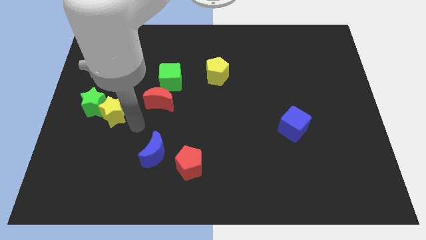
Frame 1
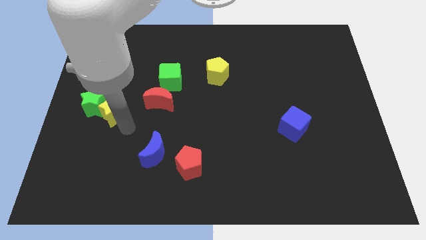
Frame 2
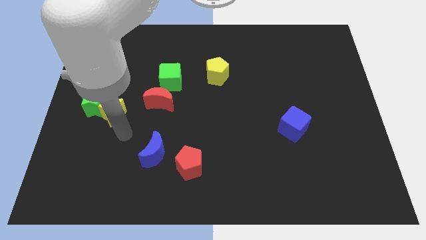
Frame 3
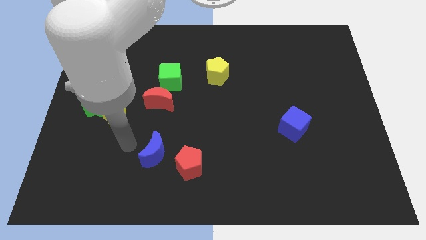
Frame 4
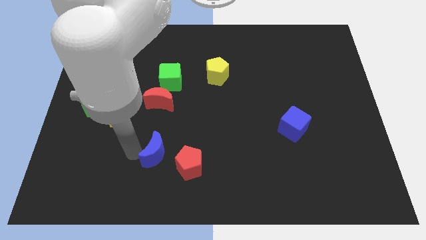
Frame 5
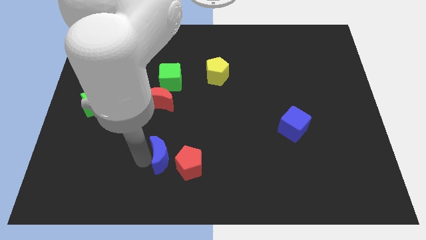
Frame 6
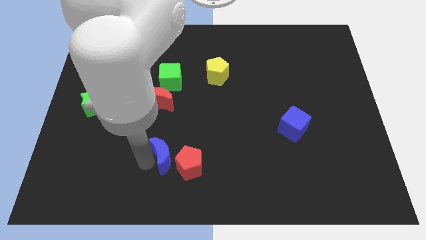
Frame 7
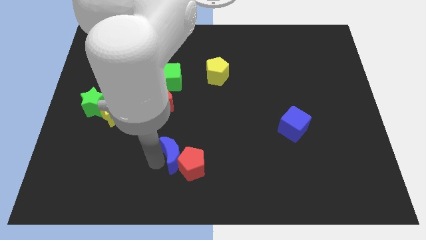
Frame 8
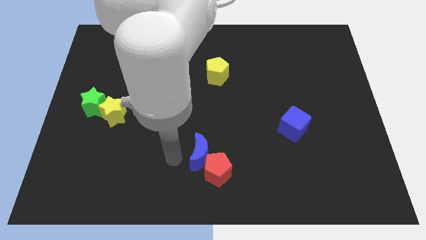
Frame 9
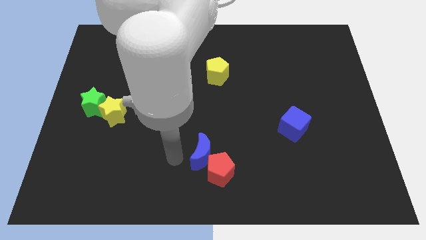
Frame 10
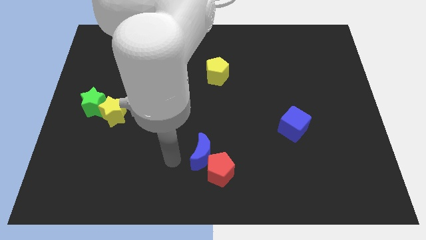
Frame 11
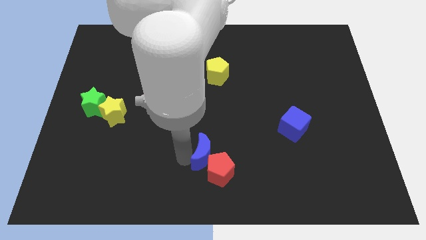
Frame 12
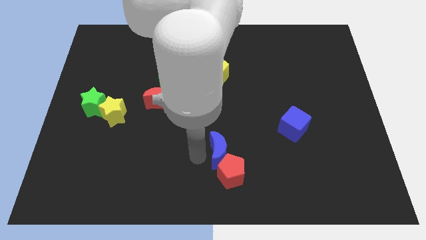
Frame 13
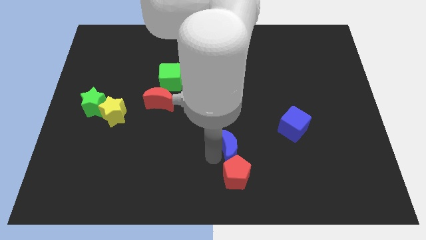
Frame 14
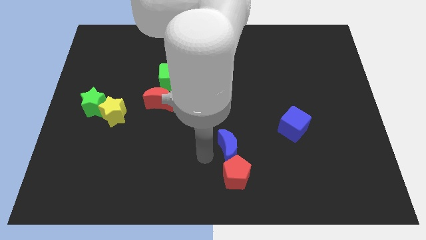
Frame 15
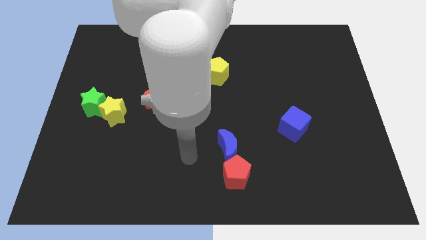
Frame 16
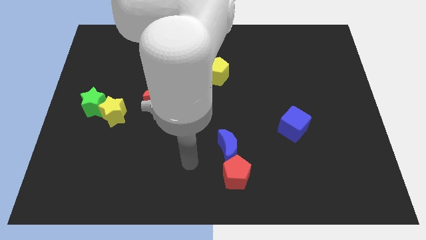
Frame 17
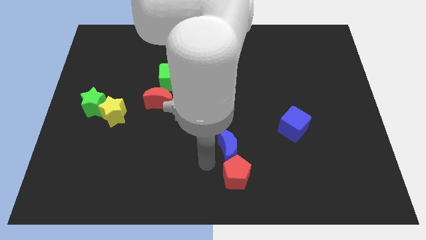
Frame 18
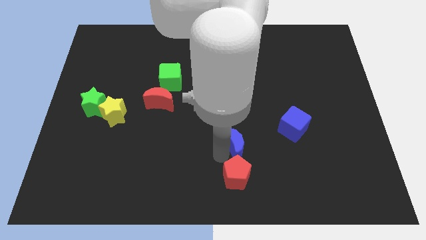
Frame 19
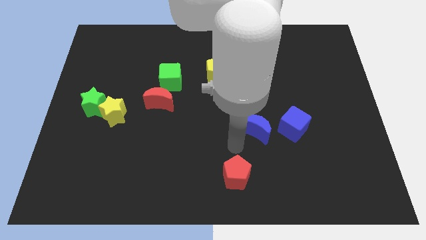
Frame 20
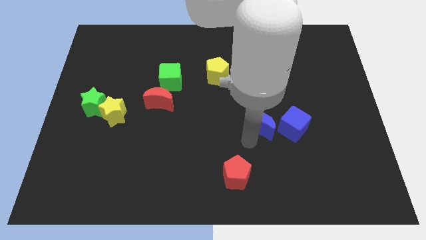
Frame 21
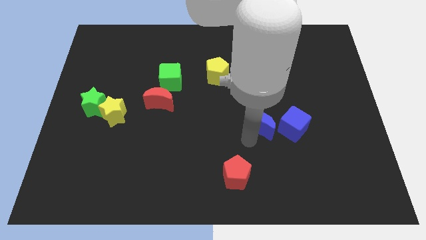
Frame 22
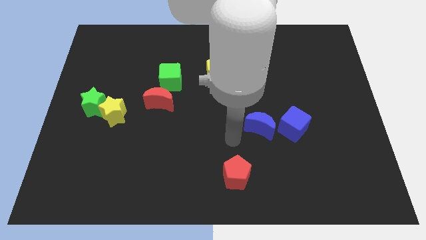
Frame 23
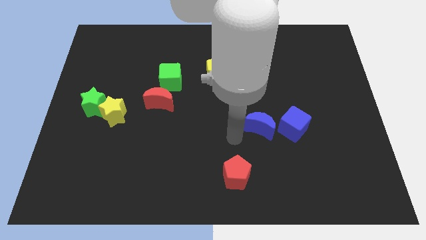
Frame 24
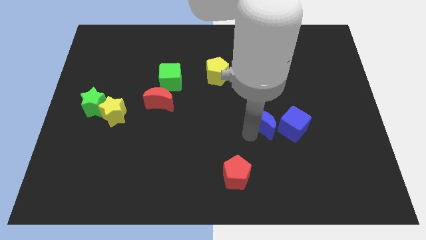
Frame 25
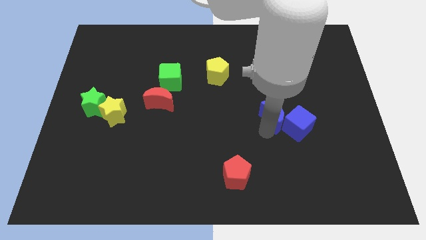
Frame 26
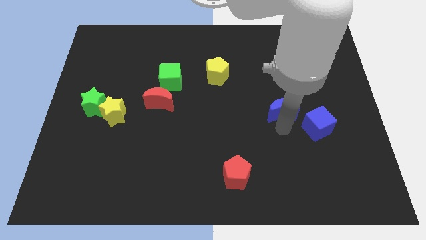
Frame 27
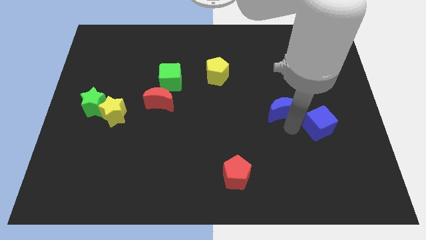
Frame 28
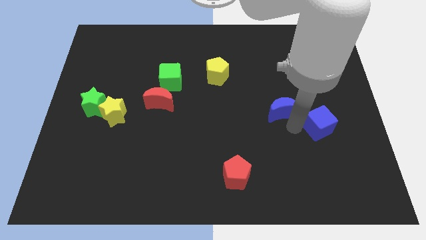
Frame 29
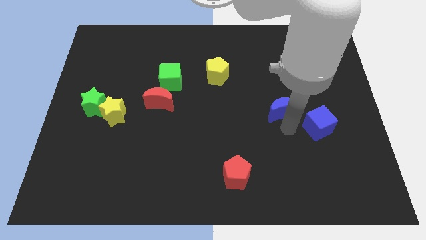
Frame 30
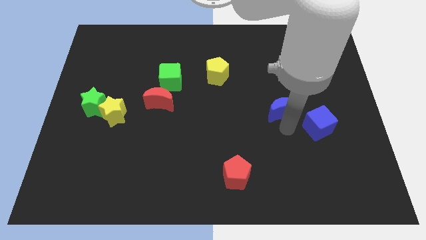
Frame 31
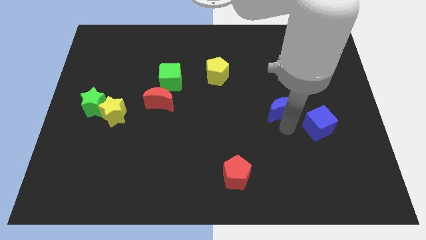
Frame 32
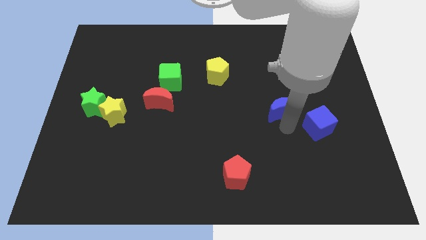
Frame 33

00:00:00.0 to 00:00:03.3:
push the blue crescent into the blue cube

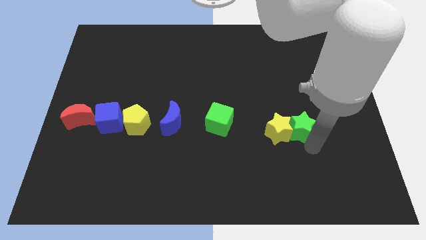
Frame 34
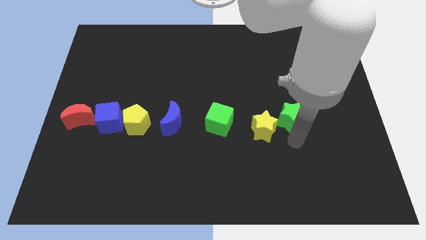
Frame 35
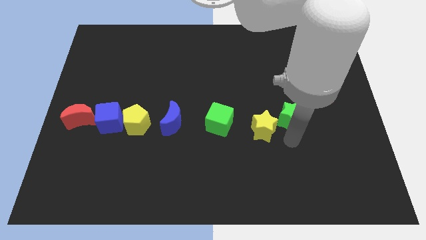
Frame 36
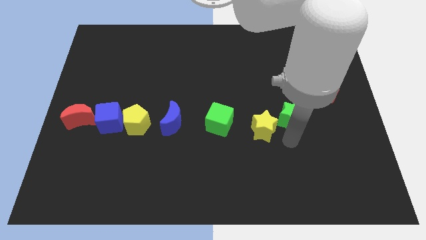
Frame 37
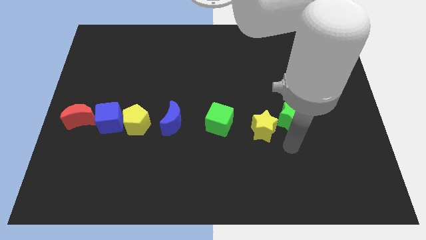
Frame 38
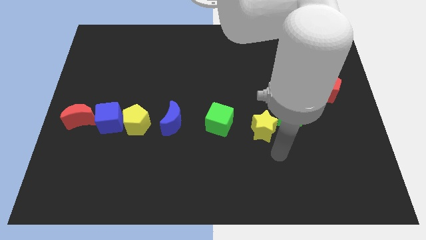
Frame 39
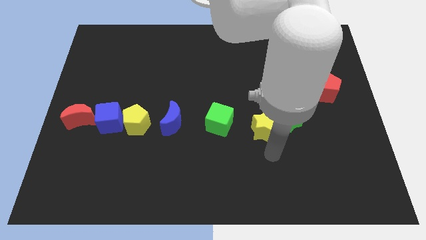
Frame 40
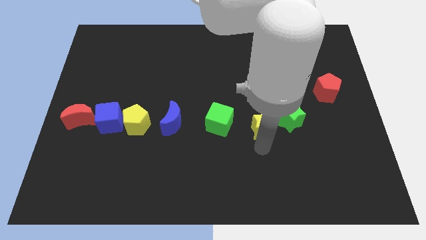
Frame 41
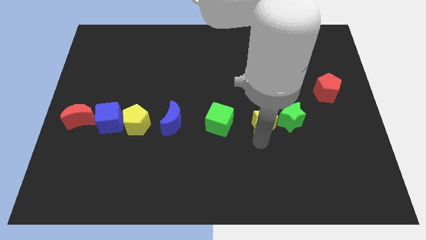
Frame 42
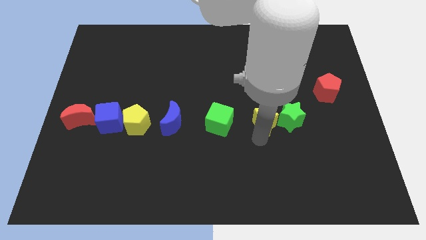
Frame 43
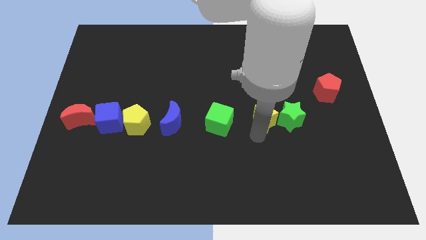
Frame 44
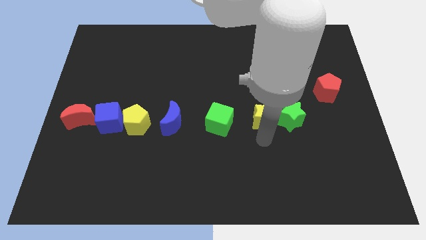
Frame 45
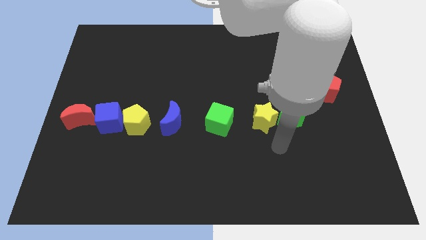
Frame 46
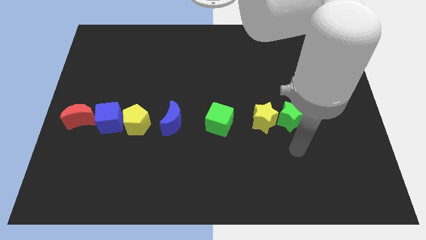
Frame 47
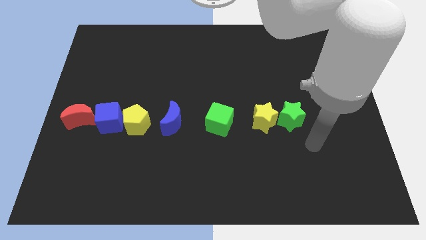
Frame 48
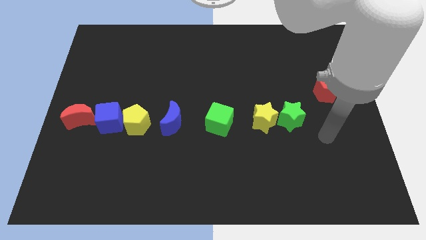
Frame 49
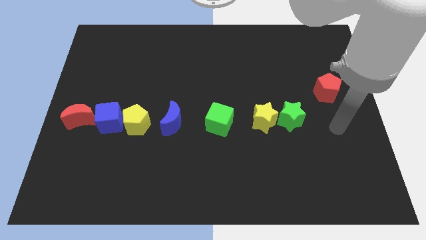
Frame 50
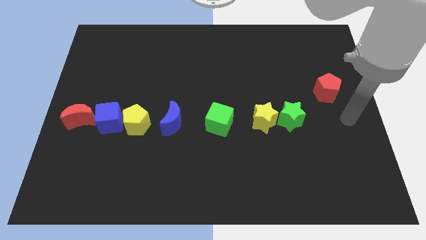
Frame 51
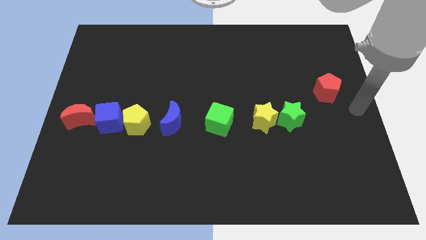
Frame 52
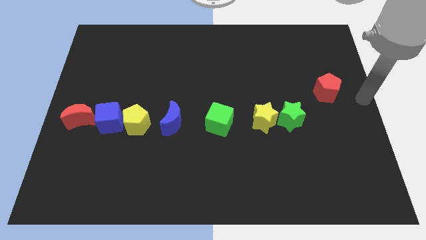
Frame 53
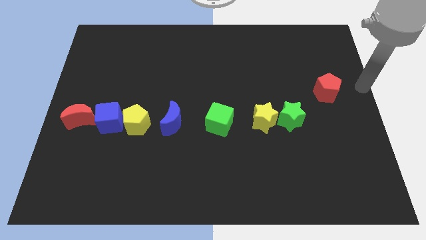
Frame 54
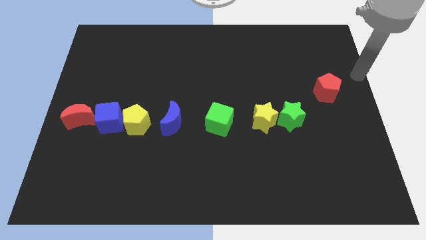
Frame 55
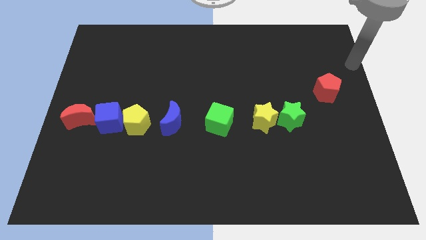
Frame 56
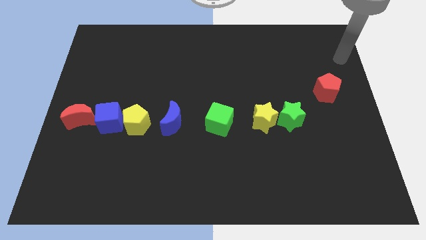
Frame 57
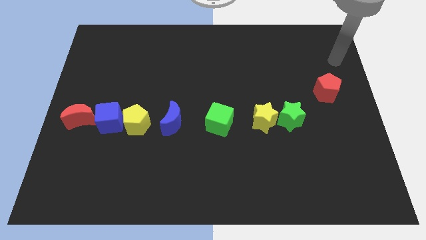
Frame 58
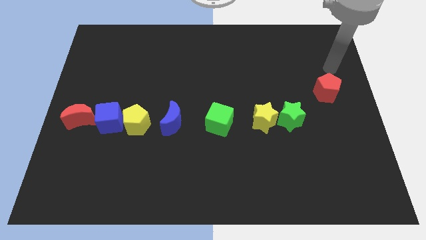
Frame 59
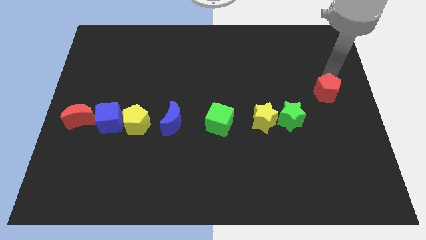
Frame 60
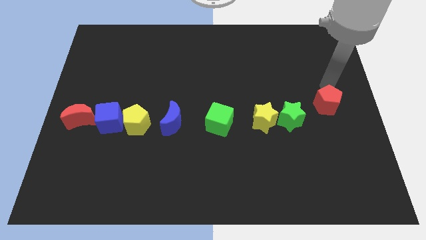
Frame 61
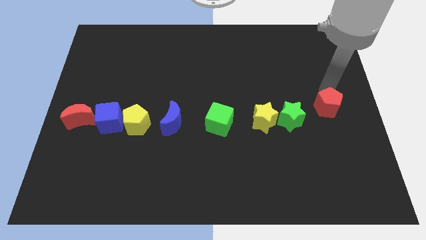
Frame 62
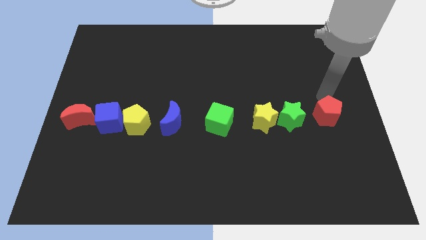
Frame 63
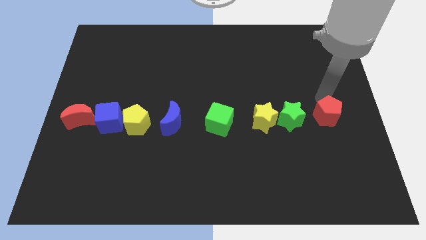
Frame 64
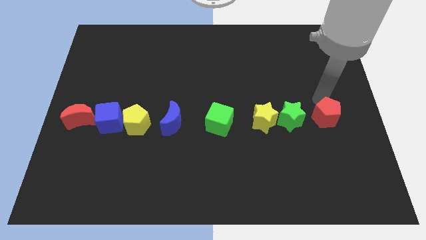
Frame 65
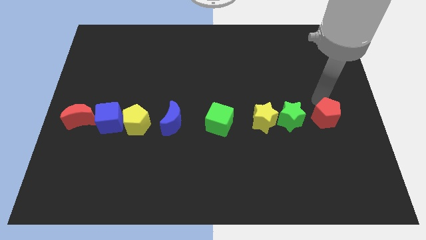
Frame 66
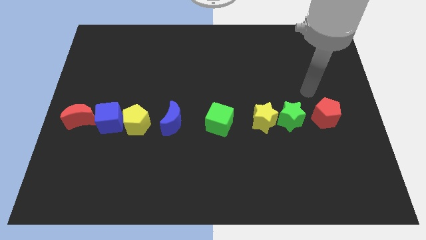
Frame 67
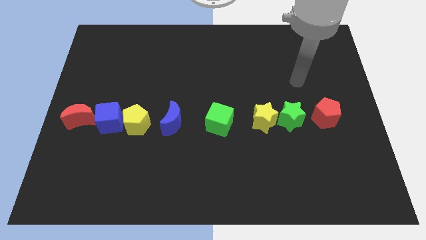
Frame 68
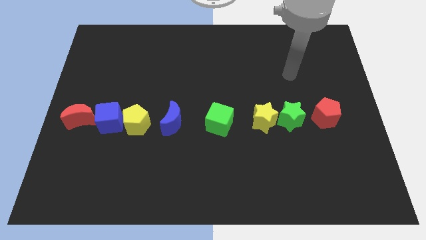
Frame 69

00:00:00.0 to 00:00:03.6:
place red pentagon to the right of green star

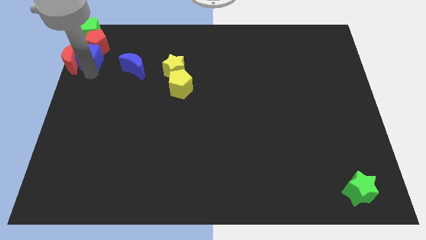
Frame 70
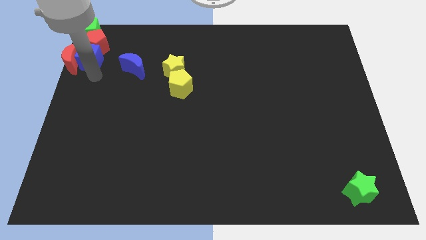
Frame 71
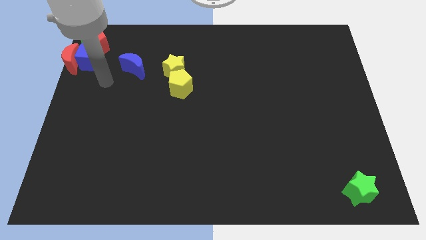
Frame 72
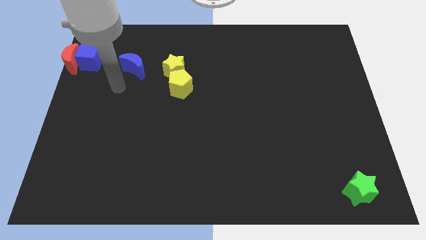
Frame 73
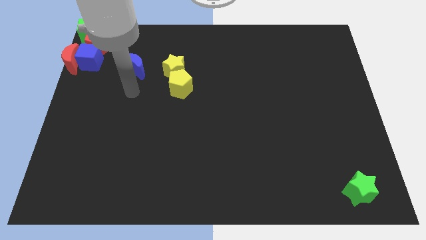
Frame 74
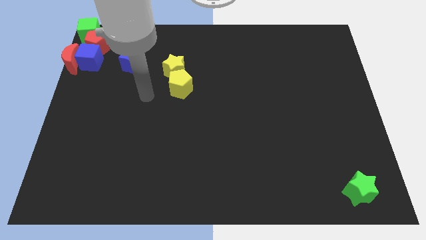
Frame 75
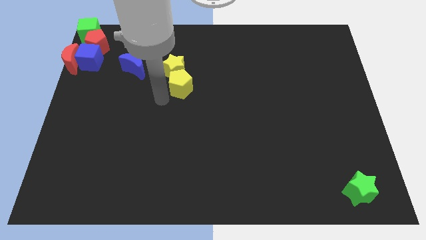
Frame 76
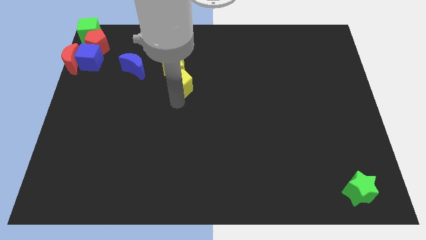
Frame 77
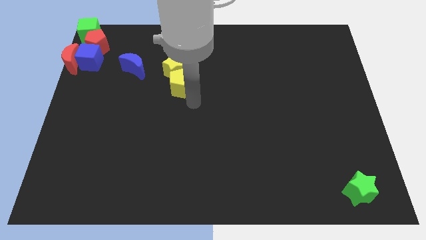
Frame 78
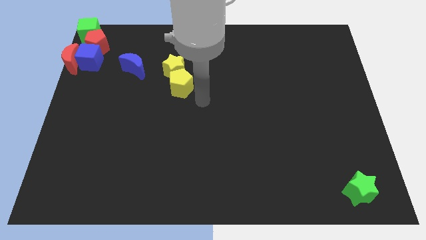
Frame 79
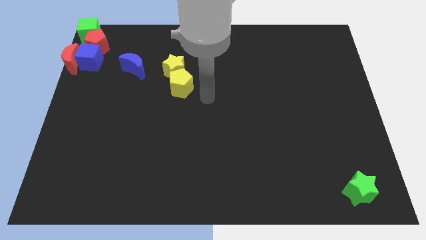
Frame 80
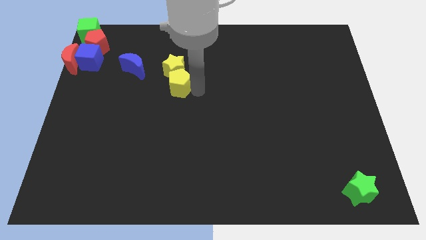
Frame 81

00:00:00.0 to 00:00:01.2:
move the arm away from the blue cube

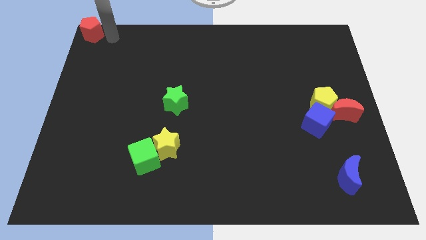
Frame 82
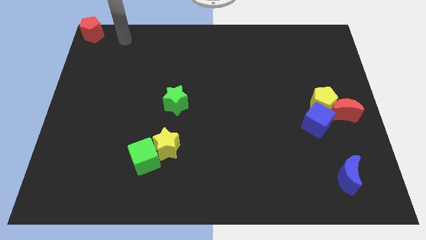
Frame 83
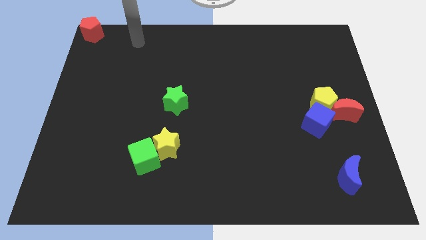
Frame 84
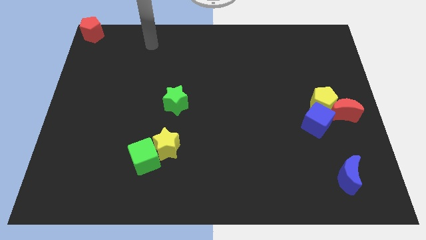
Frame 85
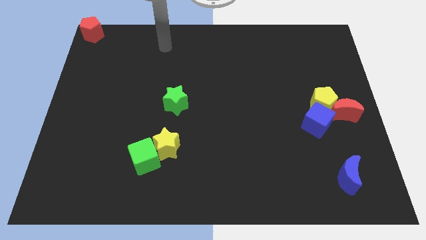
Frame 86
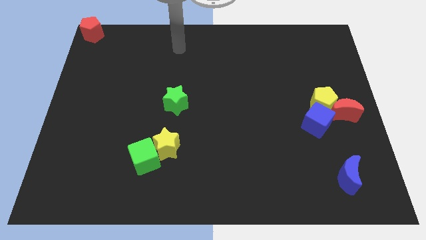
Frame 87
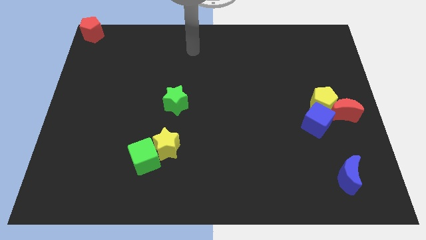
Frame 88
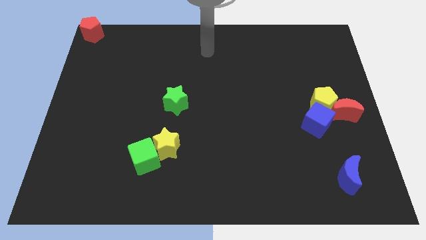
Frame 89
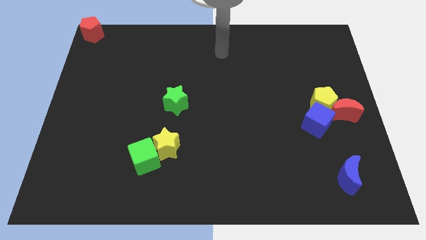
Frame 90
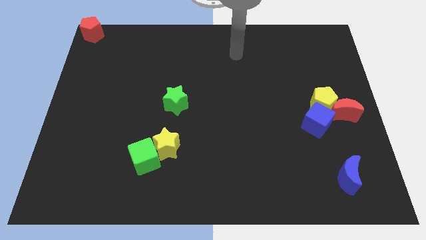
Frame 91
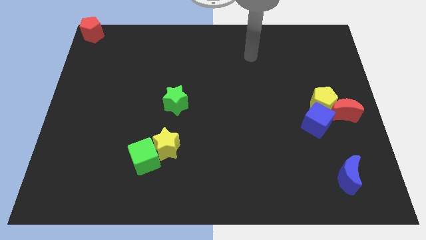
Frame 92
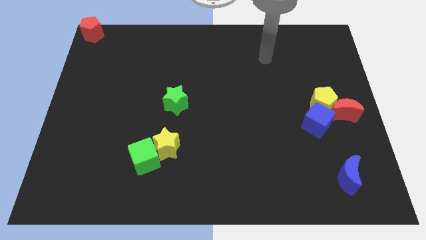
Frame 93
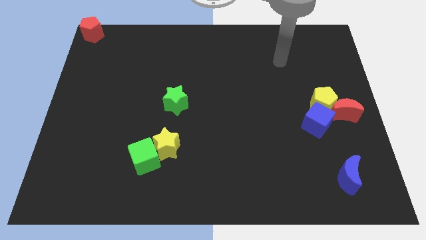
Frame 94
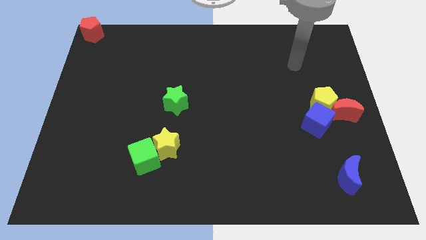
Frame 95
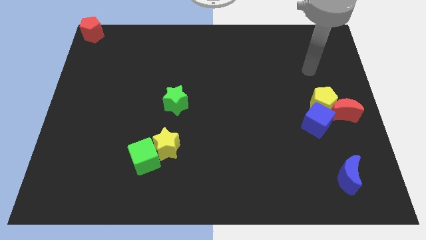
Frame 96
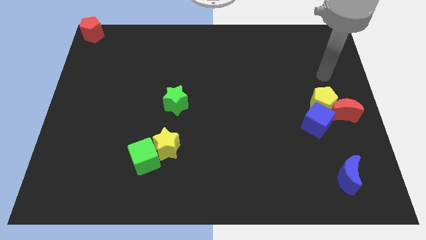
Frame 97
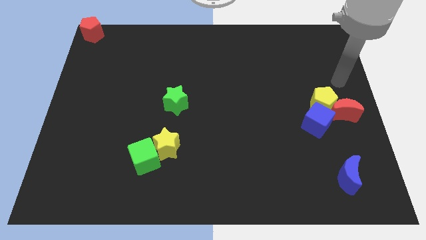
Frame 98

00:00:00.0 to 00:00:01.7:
place your arm to the top of yellow pentagon
